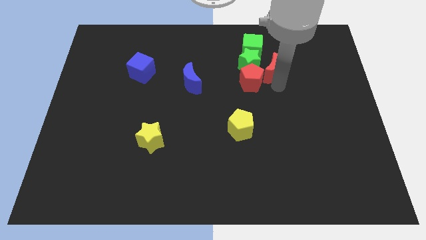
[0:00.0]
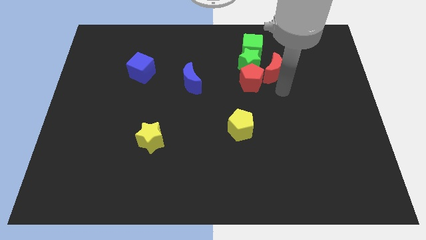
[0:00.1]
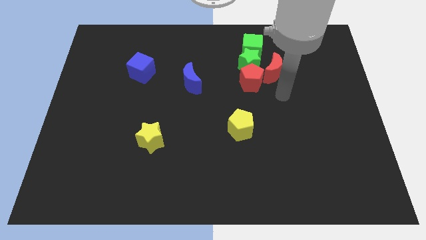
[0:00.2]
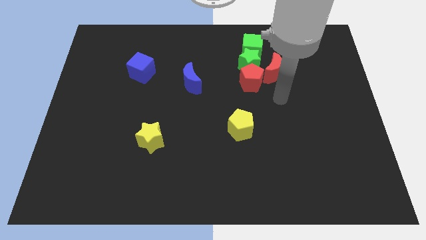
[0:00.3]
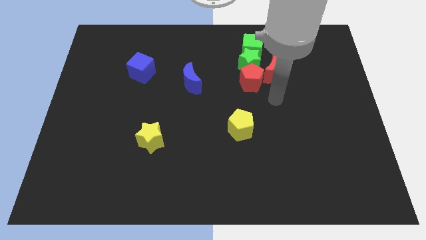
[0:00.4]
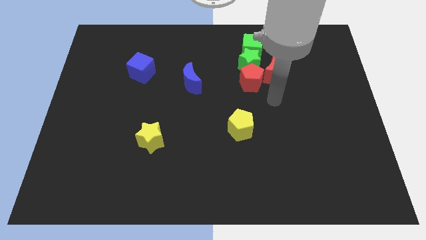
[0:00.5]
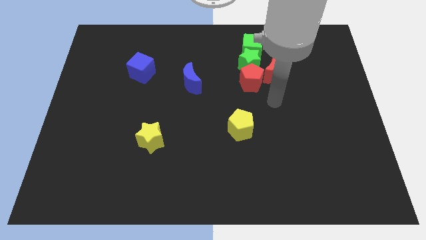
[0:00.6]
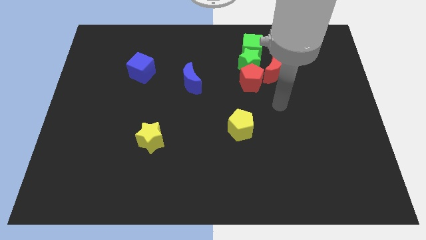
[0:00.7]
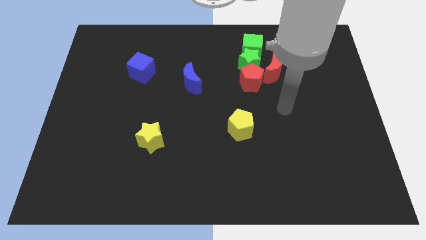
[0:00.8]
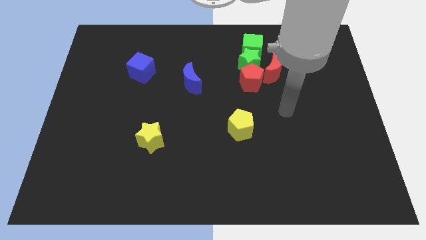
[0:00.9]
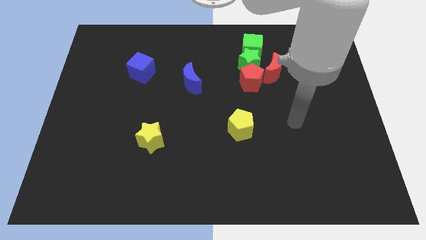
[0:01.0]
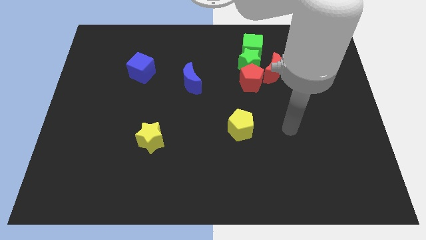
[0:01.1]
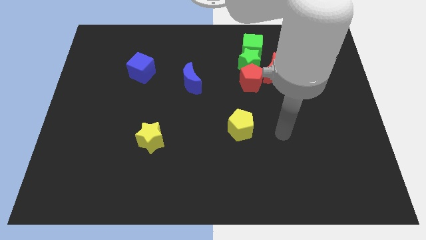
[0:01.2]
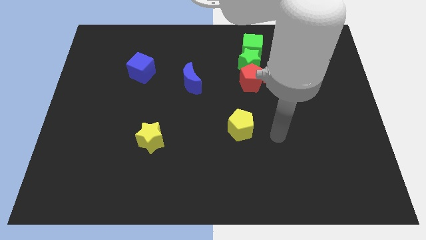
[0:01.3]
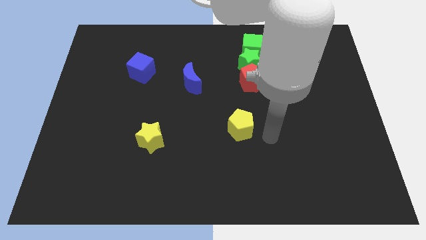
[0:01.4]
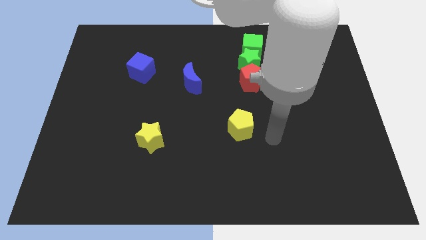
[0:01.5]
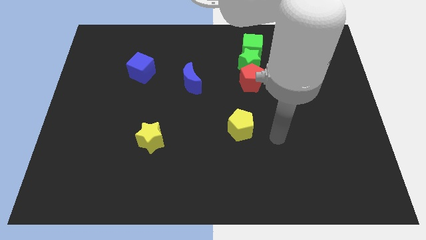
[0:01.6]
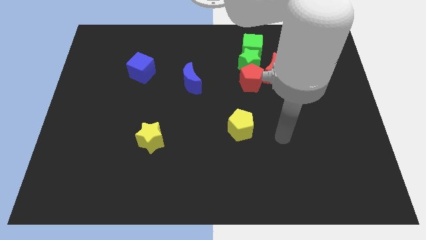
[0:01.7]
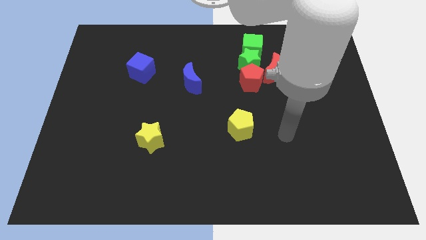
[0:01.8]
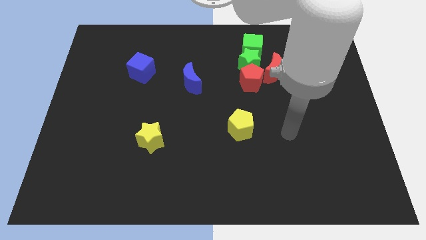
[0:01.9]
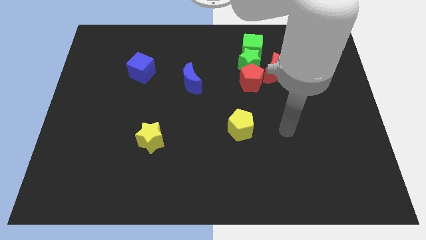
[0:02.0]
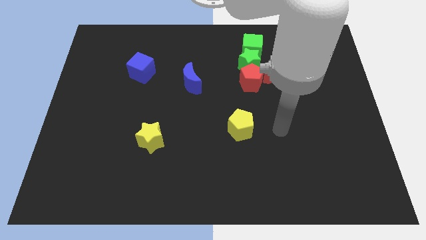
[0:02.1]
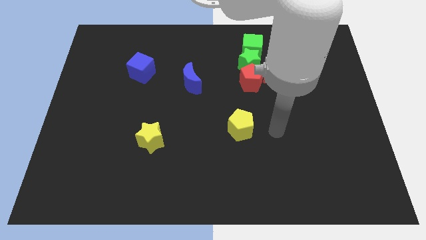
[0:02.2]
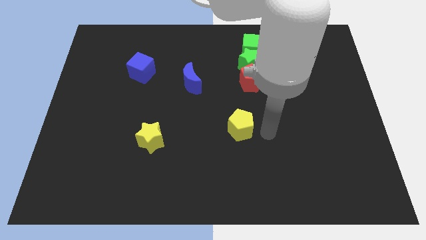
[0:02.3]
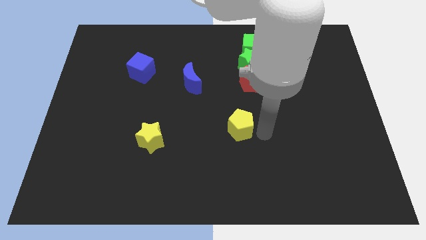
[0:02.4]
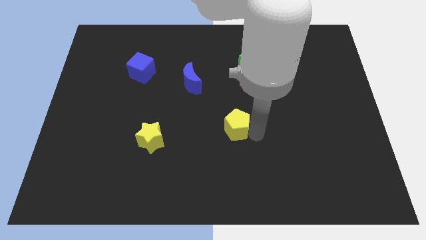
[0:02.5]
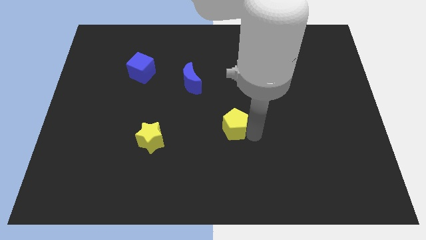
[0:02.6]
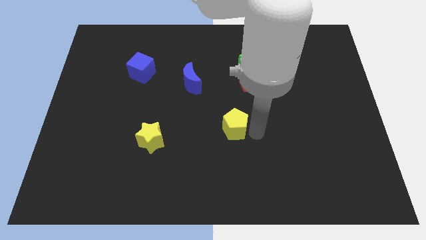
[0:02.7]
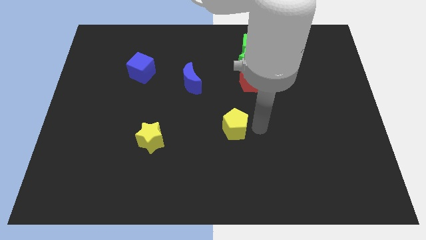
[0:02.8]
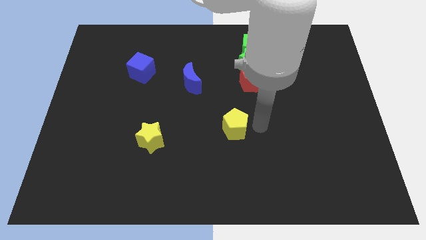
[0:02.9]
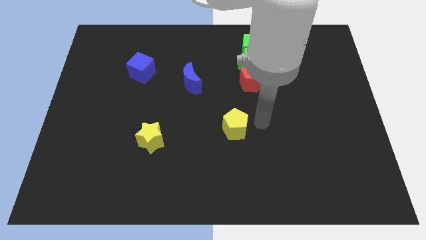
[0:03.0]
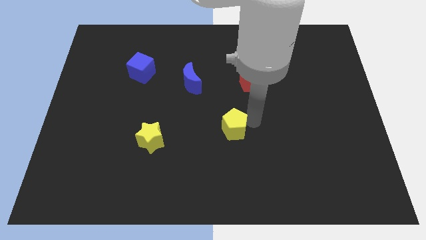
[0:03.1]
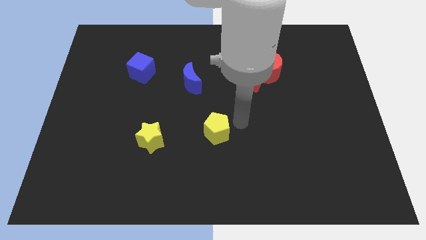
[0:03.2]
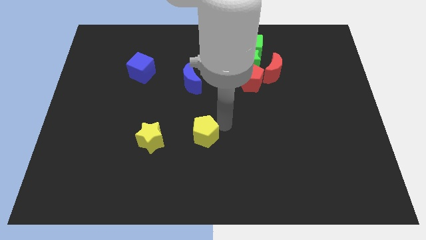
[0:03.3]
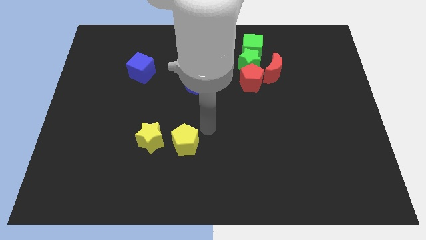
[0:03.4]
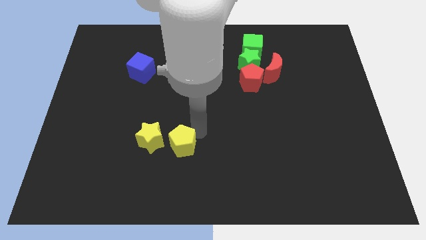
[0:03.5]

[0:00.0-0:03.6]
place the yellow pentagon right to the yellow star

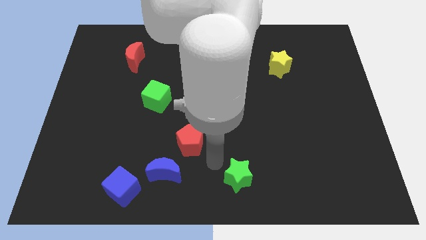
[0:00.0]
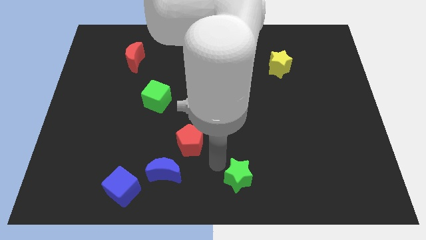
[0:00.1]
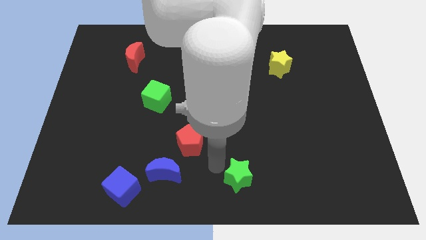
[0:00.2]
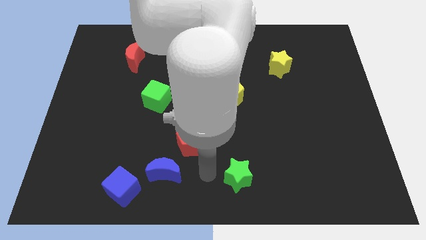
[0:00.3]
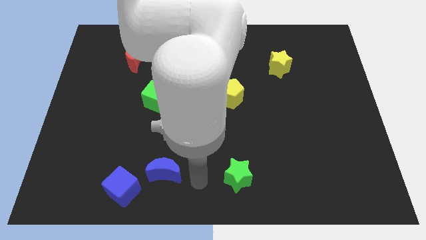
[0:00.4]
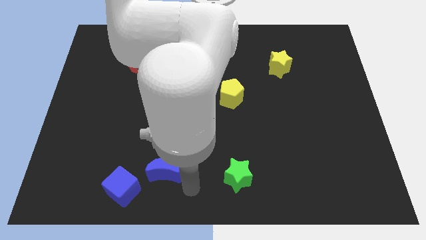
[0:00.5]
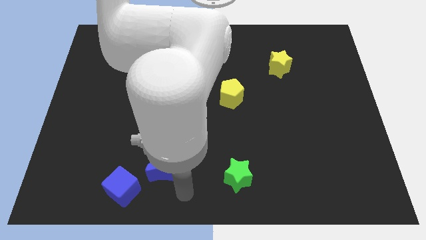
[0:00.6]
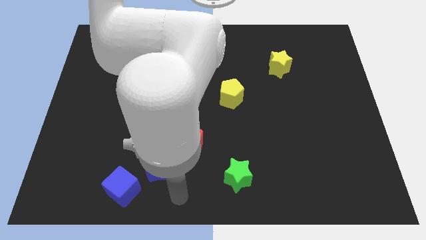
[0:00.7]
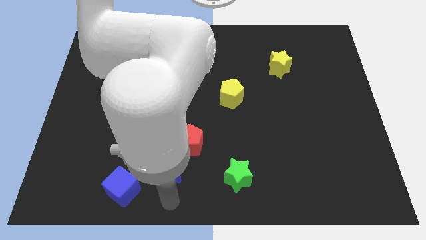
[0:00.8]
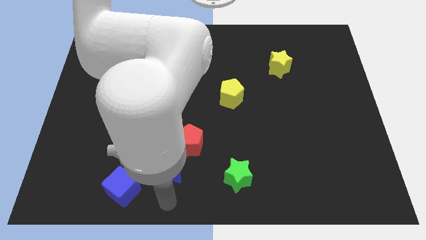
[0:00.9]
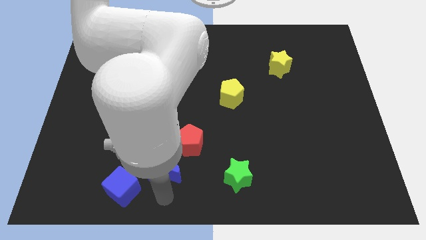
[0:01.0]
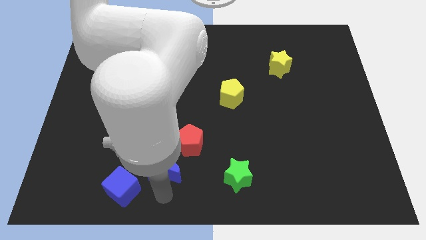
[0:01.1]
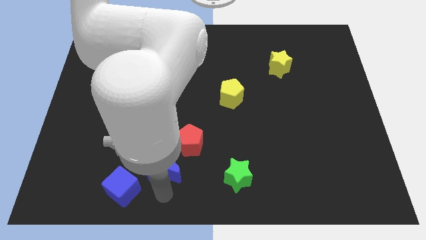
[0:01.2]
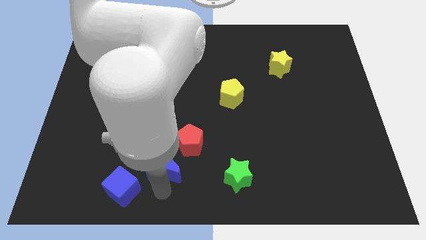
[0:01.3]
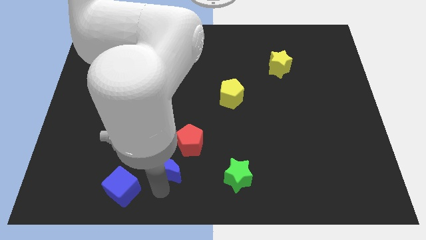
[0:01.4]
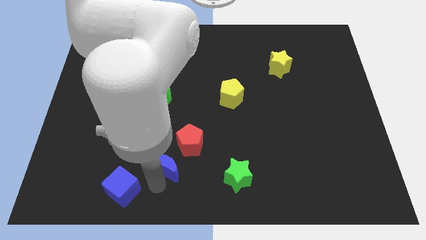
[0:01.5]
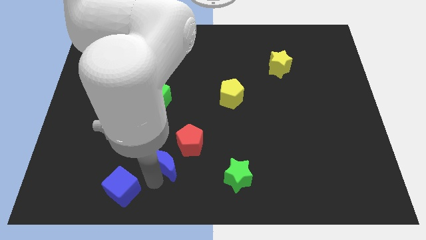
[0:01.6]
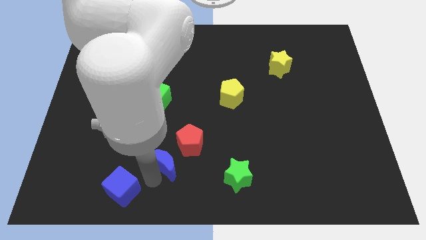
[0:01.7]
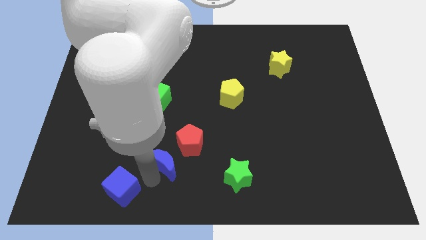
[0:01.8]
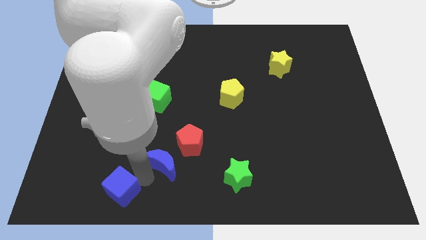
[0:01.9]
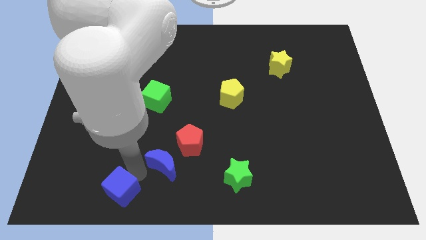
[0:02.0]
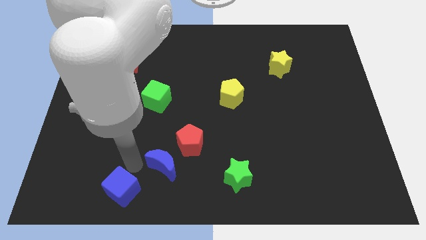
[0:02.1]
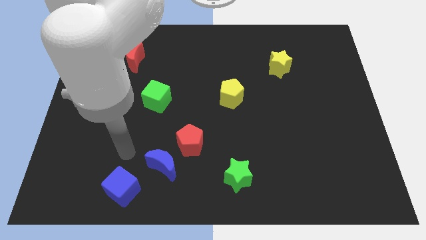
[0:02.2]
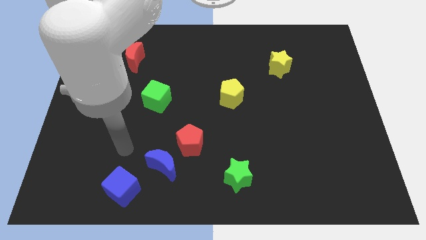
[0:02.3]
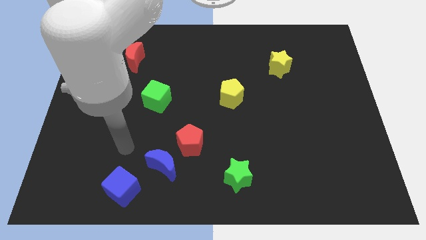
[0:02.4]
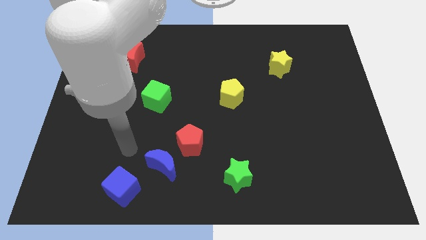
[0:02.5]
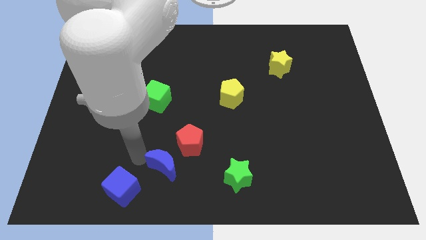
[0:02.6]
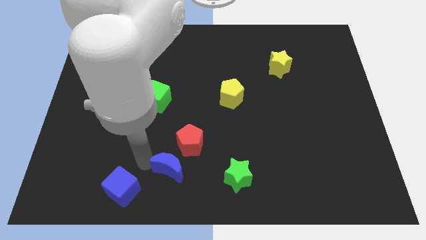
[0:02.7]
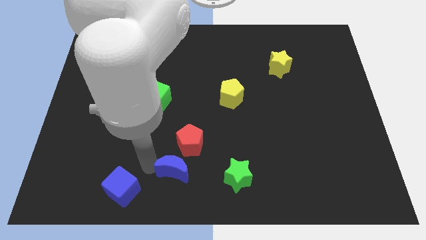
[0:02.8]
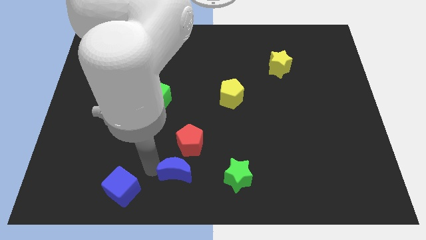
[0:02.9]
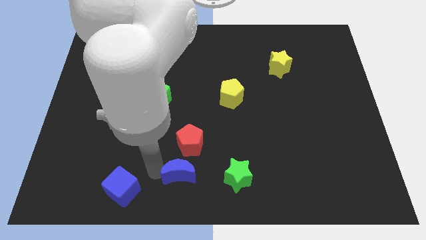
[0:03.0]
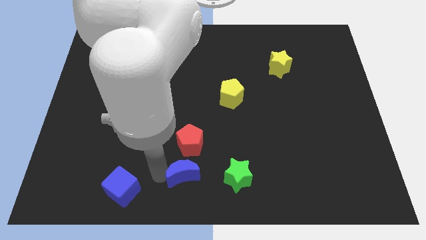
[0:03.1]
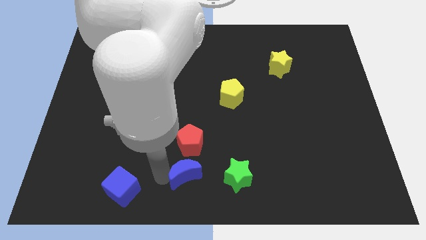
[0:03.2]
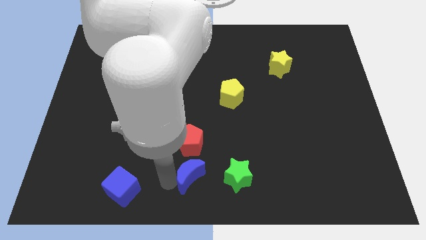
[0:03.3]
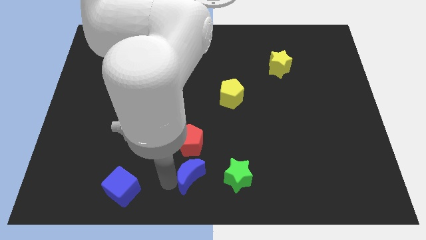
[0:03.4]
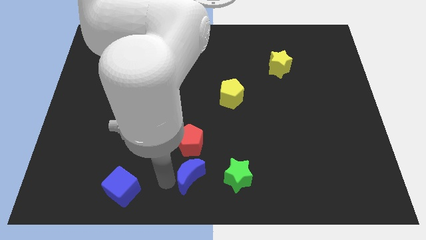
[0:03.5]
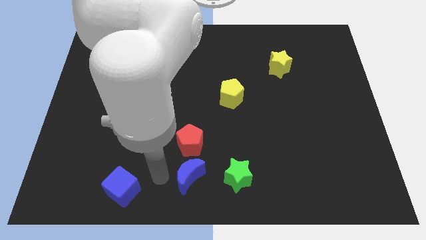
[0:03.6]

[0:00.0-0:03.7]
push the blue crescent below the red pentagon

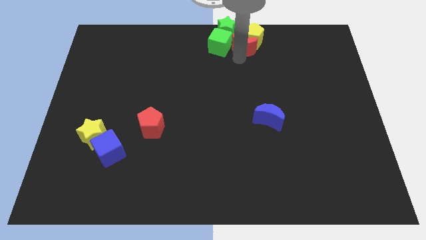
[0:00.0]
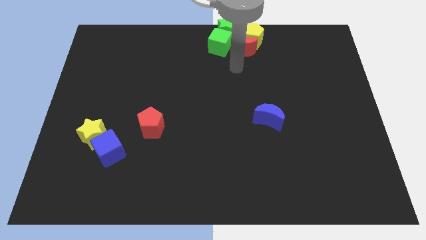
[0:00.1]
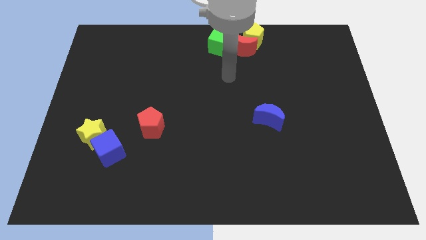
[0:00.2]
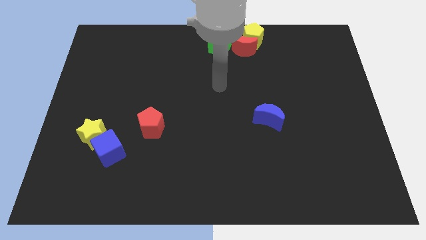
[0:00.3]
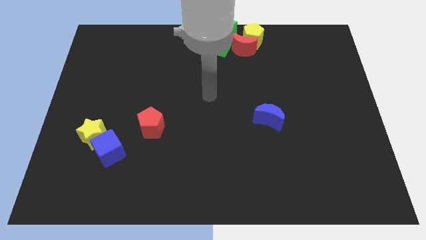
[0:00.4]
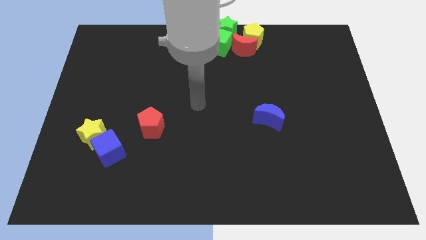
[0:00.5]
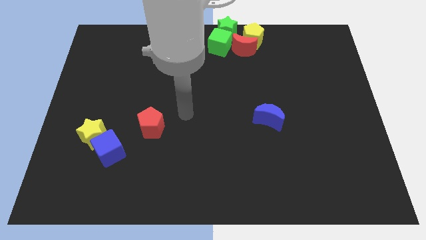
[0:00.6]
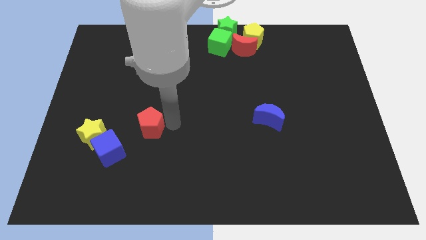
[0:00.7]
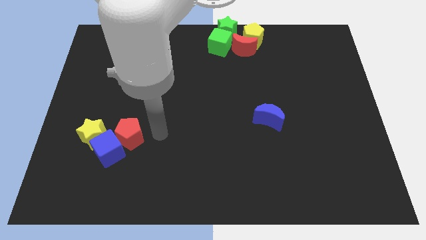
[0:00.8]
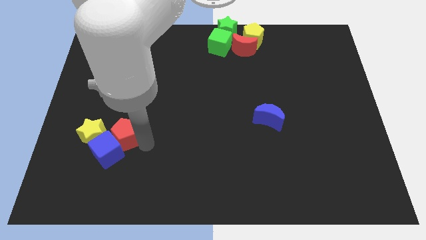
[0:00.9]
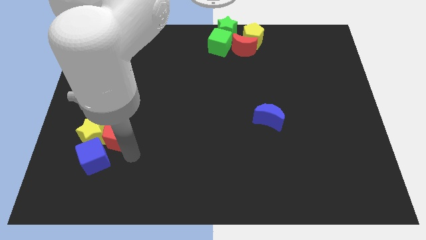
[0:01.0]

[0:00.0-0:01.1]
push red pentagon in to blue cube

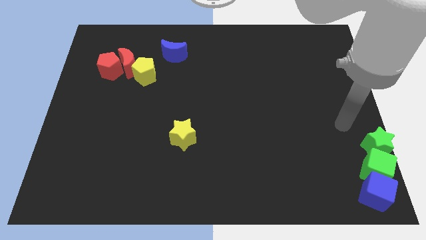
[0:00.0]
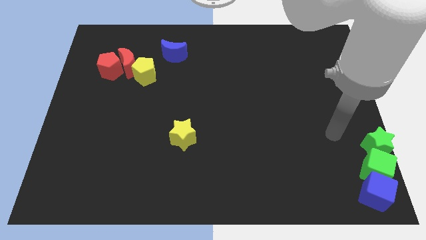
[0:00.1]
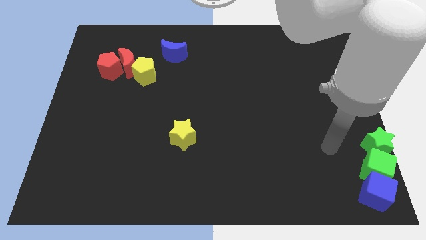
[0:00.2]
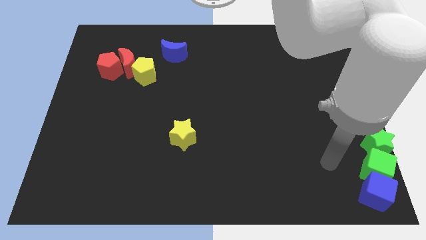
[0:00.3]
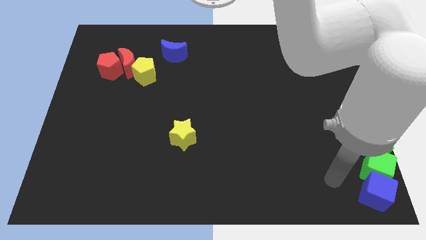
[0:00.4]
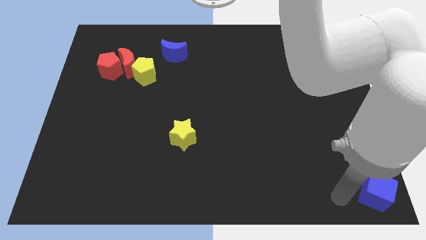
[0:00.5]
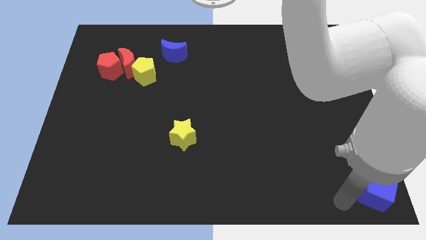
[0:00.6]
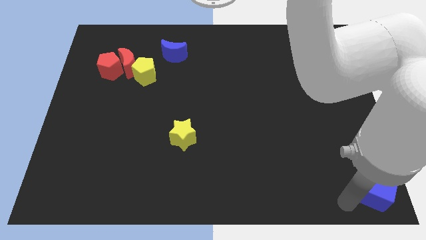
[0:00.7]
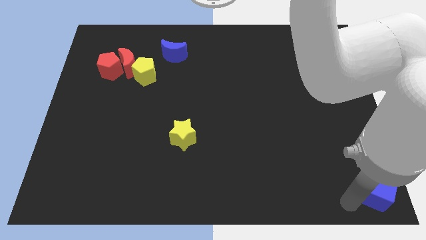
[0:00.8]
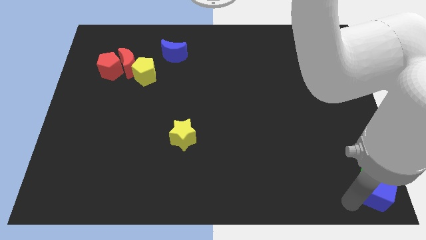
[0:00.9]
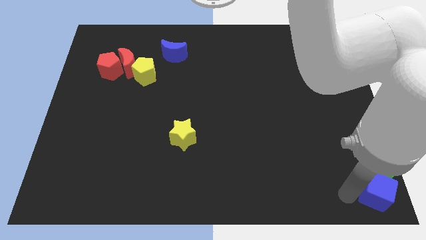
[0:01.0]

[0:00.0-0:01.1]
move your arm to the left side of the blue cube
